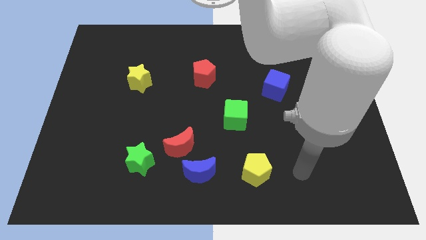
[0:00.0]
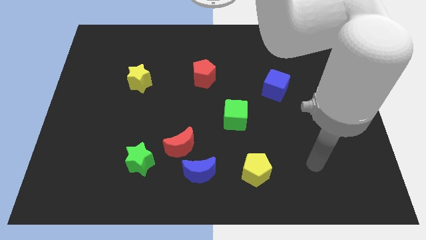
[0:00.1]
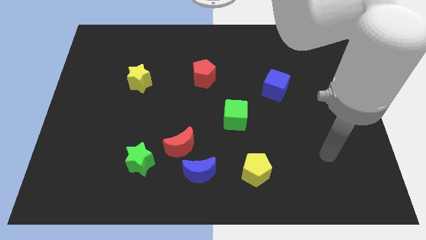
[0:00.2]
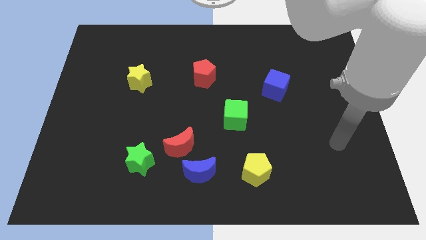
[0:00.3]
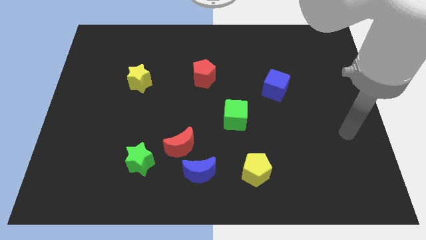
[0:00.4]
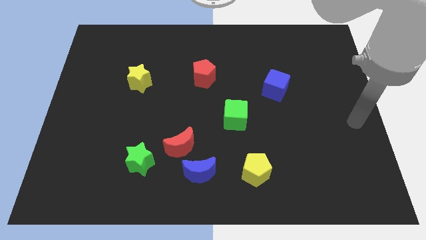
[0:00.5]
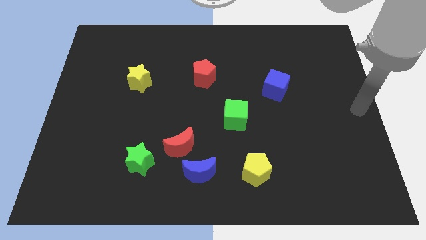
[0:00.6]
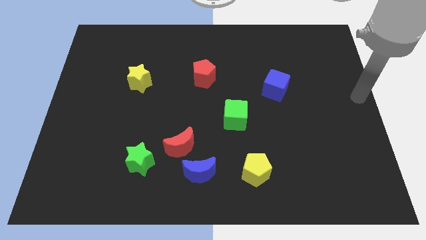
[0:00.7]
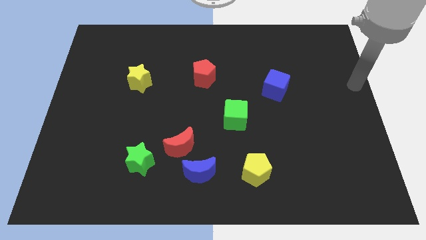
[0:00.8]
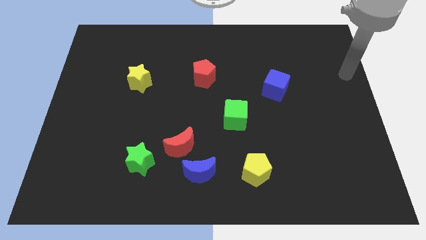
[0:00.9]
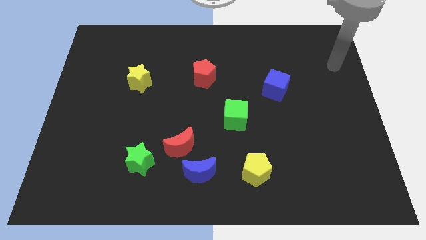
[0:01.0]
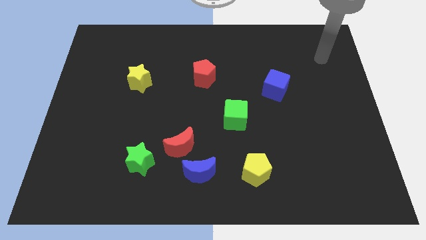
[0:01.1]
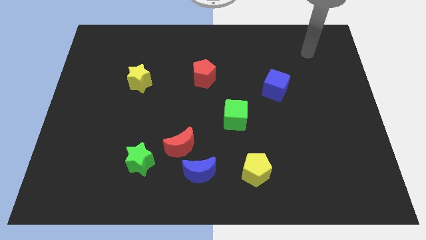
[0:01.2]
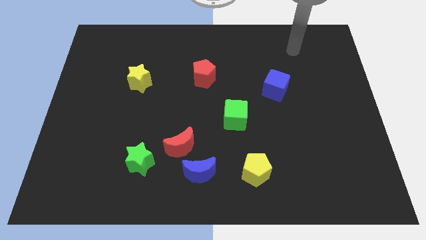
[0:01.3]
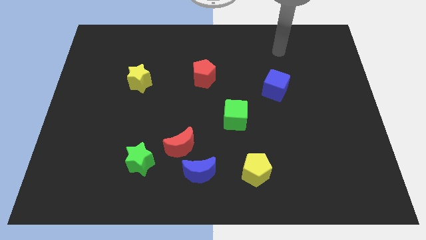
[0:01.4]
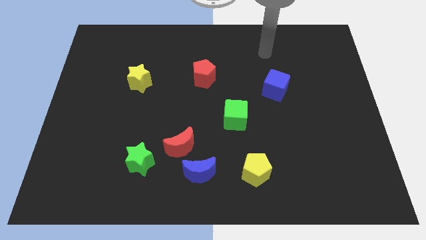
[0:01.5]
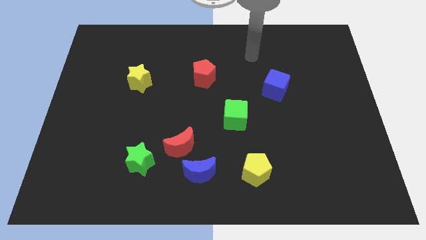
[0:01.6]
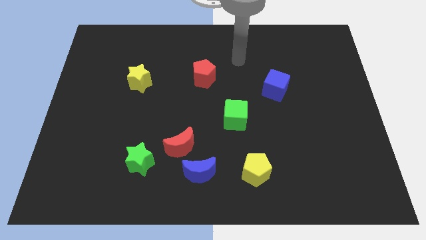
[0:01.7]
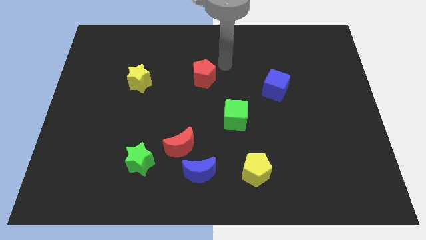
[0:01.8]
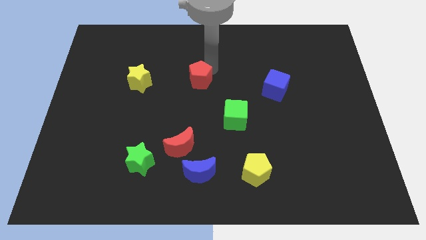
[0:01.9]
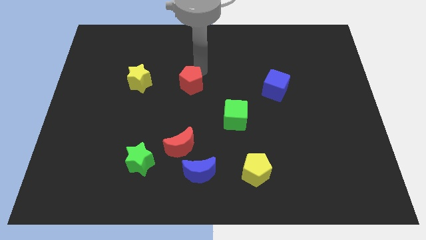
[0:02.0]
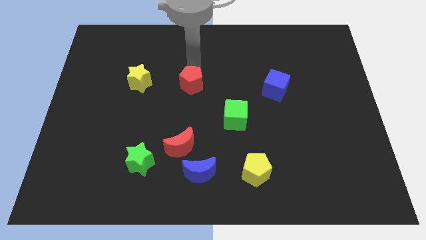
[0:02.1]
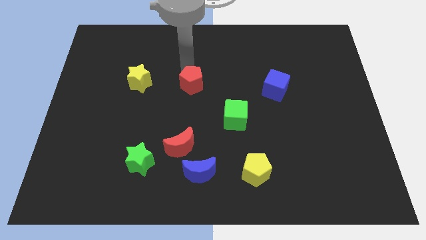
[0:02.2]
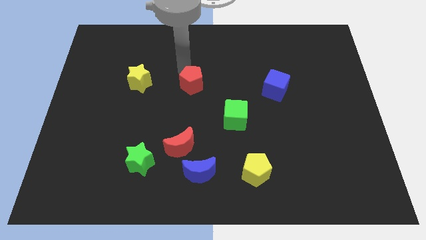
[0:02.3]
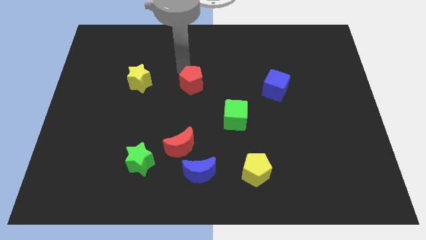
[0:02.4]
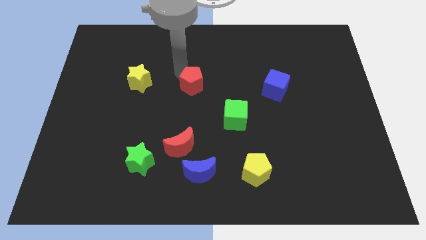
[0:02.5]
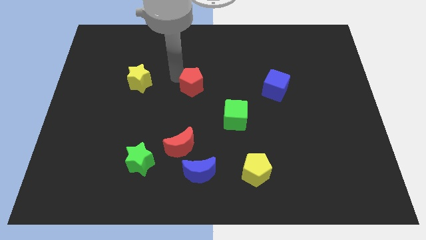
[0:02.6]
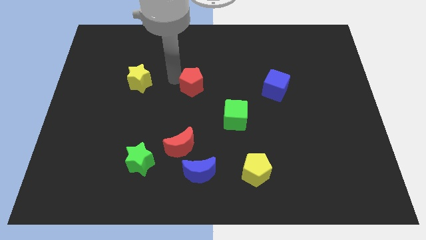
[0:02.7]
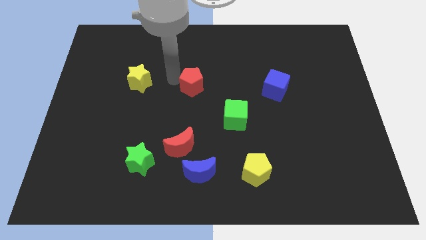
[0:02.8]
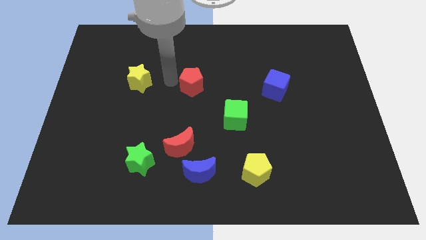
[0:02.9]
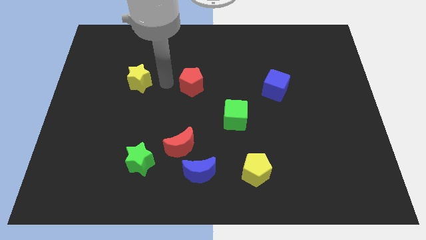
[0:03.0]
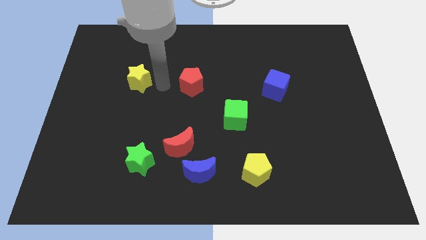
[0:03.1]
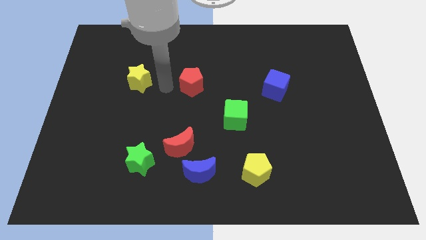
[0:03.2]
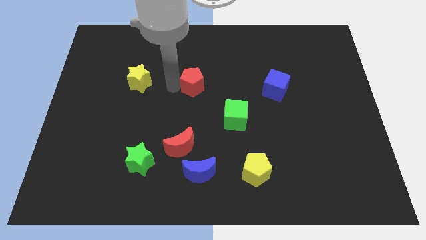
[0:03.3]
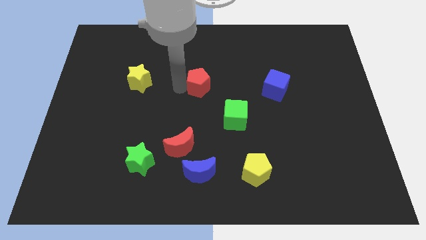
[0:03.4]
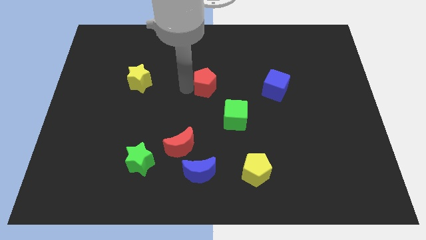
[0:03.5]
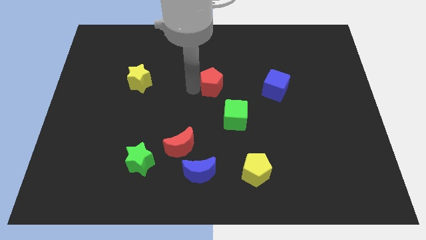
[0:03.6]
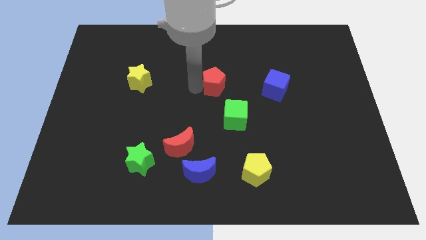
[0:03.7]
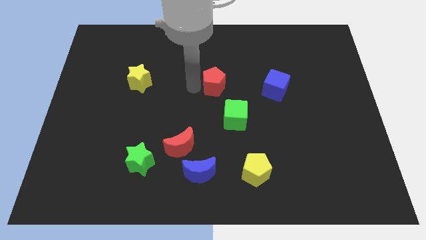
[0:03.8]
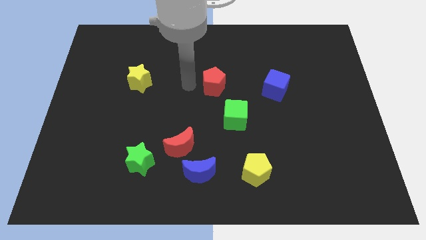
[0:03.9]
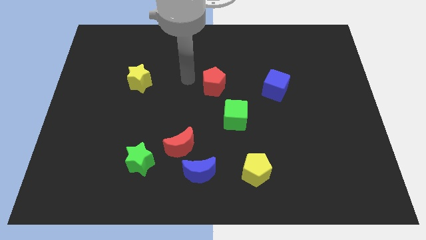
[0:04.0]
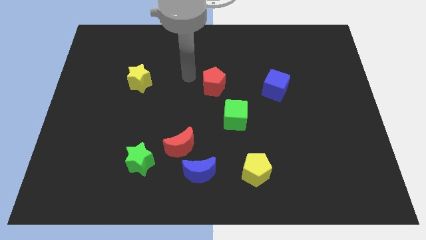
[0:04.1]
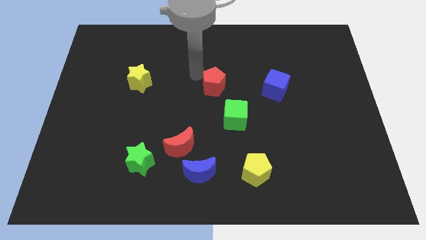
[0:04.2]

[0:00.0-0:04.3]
place the red pentagon in between the yellow star and blue cube

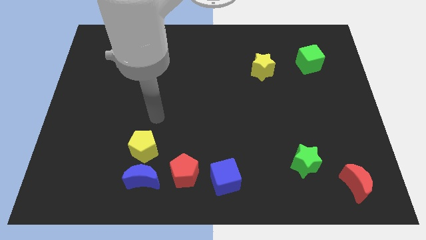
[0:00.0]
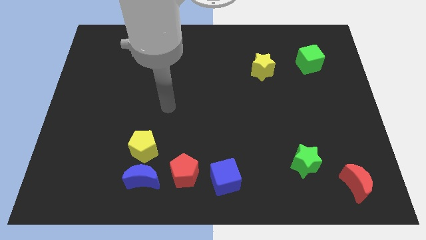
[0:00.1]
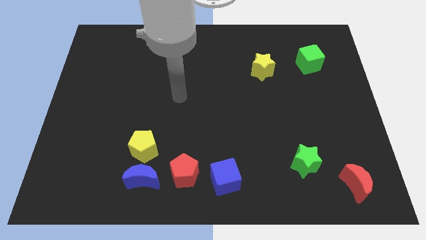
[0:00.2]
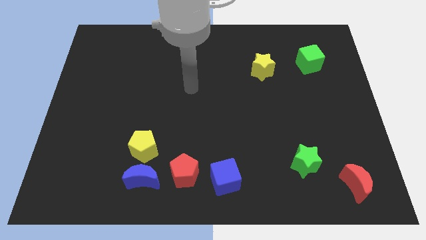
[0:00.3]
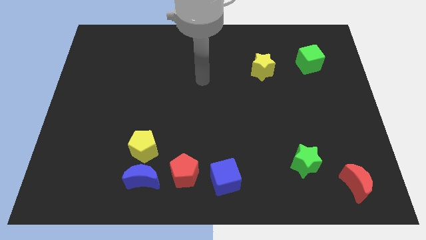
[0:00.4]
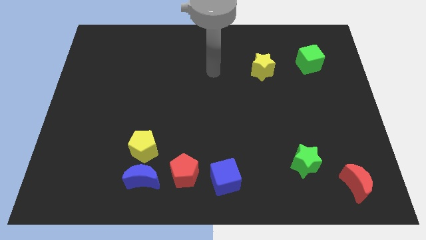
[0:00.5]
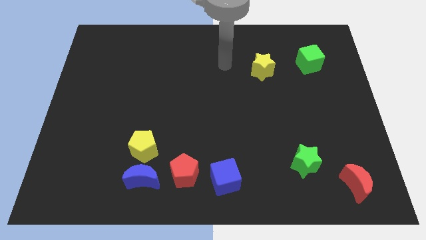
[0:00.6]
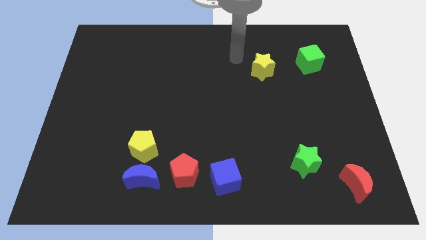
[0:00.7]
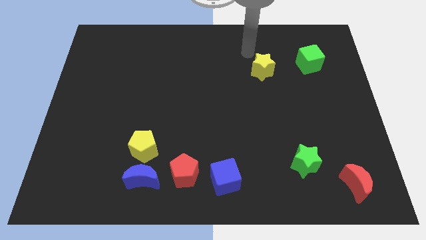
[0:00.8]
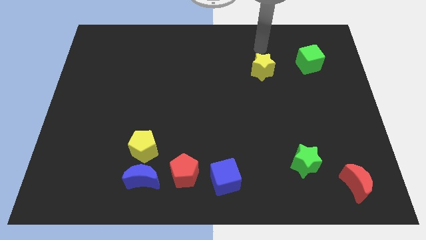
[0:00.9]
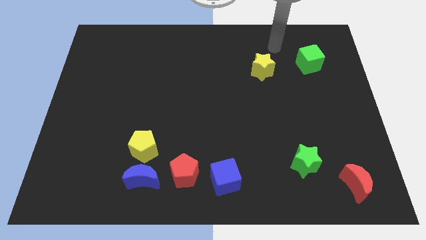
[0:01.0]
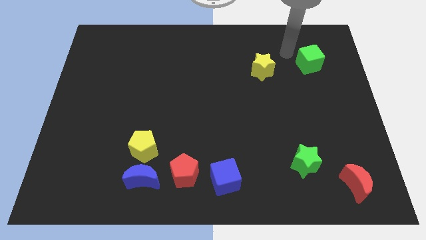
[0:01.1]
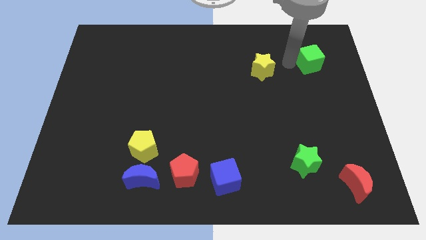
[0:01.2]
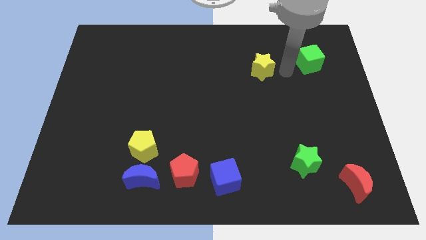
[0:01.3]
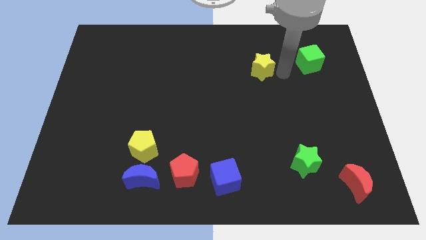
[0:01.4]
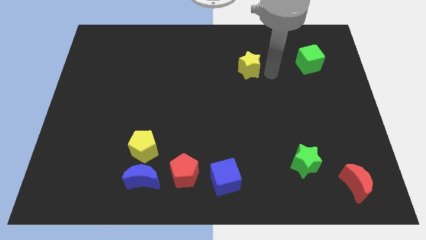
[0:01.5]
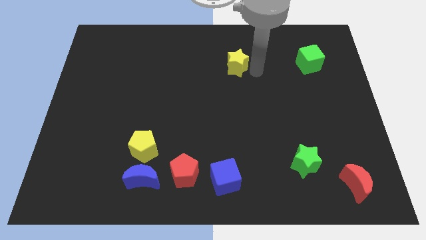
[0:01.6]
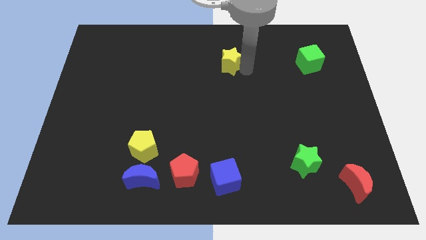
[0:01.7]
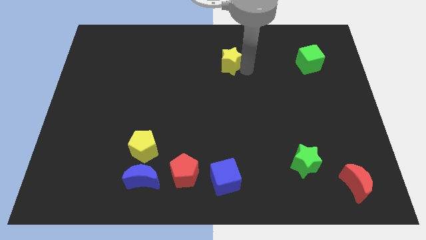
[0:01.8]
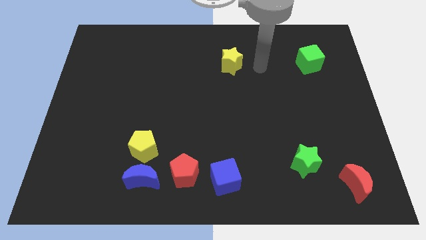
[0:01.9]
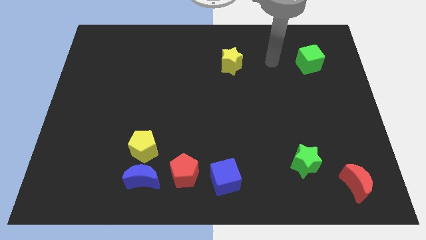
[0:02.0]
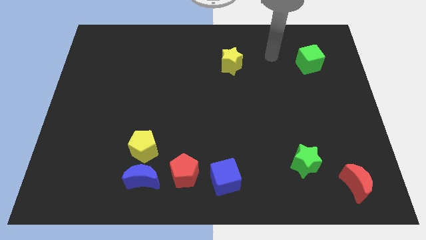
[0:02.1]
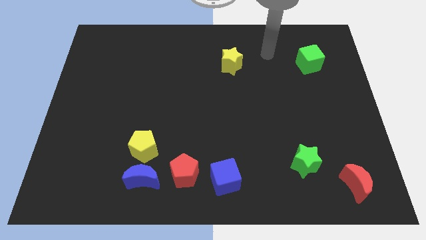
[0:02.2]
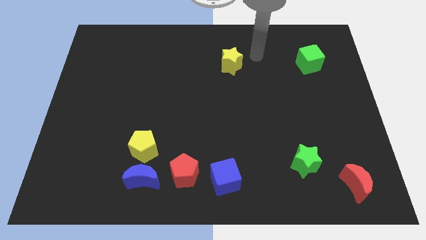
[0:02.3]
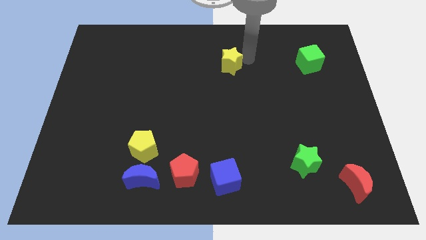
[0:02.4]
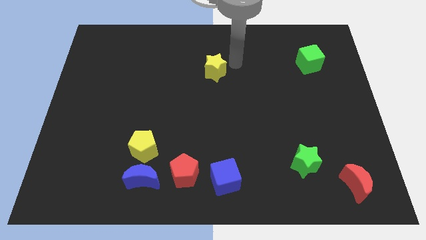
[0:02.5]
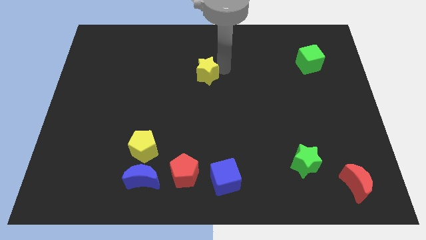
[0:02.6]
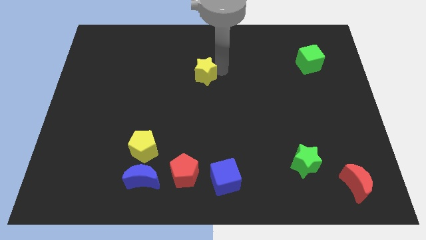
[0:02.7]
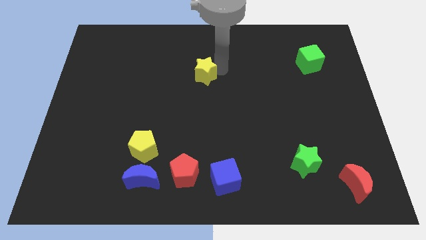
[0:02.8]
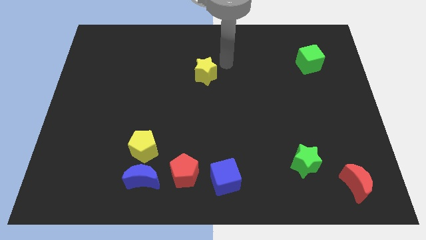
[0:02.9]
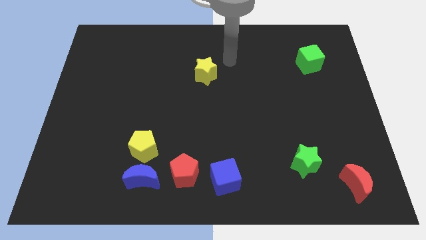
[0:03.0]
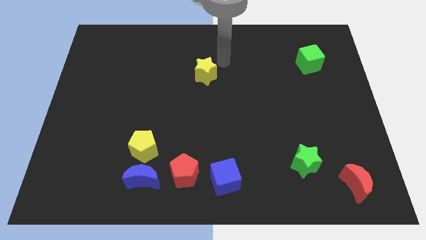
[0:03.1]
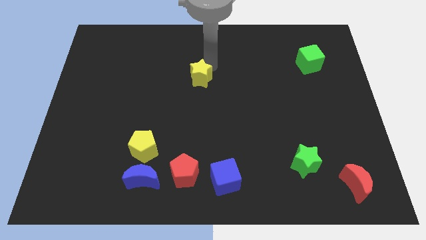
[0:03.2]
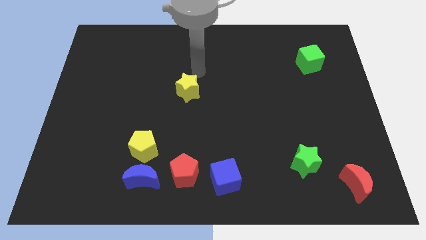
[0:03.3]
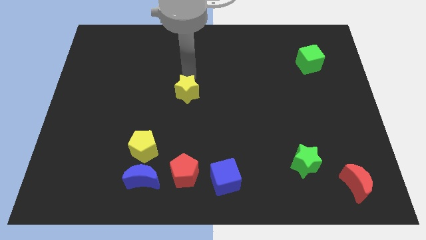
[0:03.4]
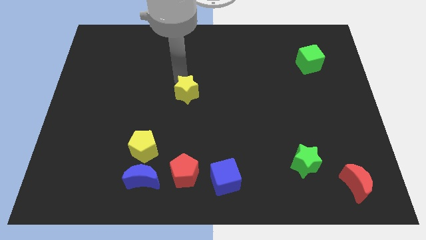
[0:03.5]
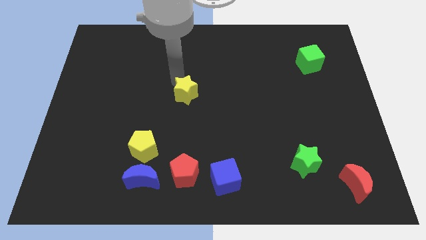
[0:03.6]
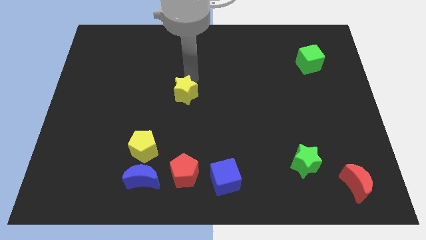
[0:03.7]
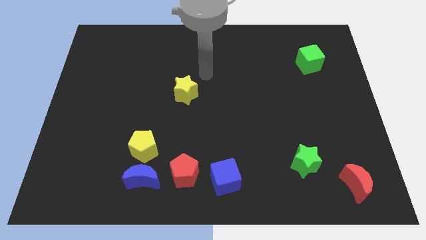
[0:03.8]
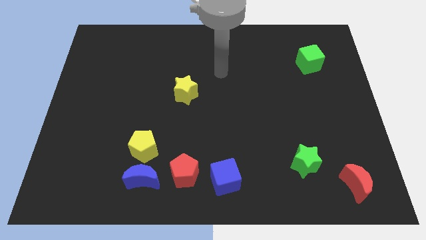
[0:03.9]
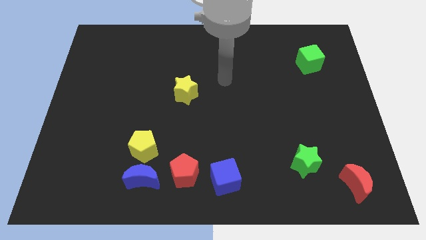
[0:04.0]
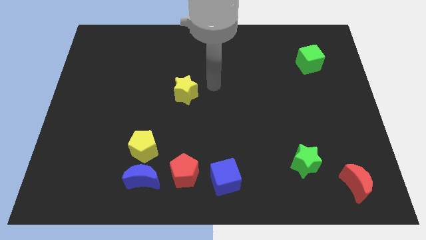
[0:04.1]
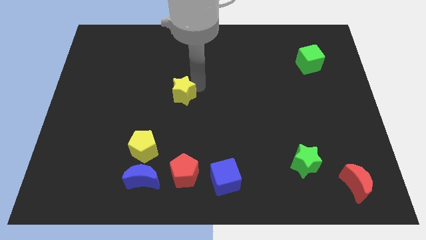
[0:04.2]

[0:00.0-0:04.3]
move the yellow star vertically above to the red pentagon

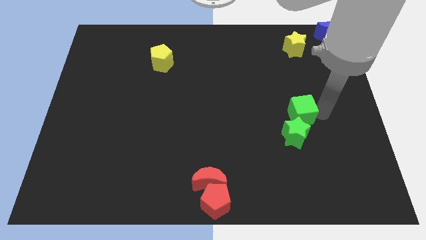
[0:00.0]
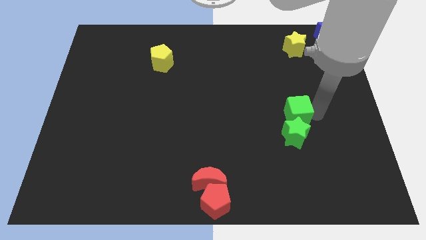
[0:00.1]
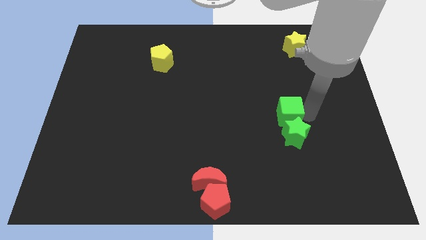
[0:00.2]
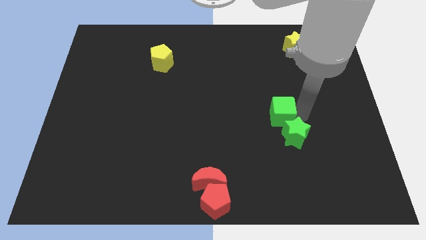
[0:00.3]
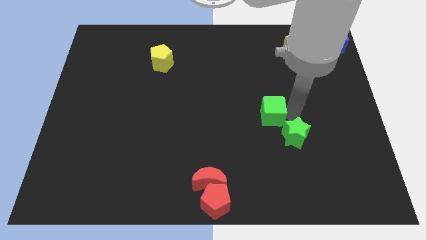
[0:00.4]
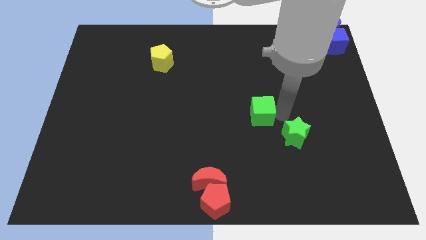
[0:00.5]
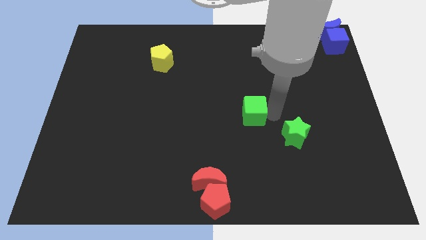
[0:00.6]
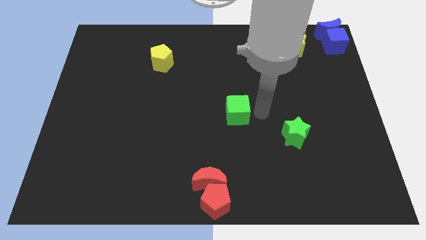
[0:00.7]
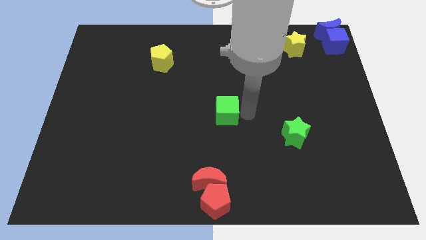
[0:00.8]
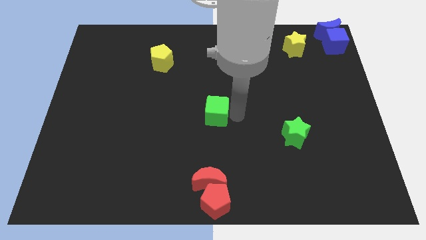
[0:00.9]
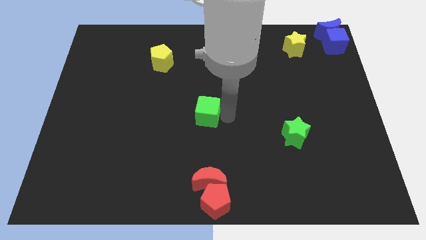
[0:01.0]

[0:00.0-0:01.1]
move the green cube to the center of the board
